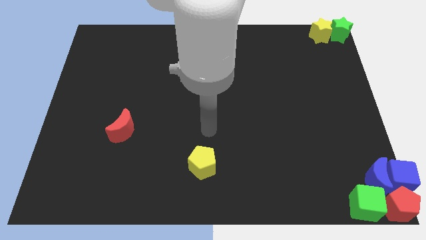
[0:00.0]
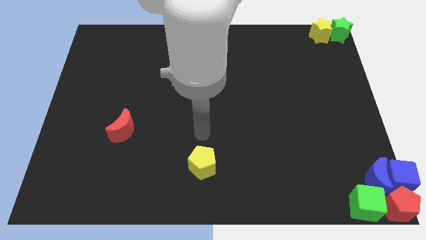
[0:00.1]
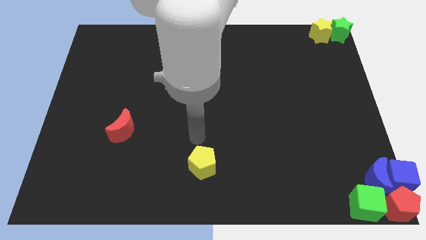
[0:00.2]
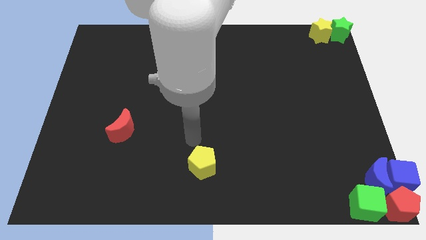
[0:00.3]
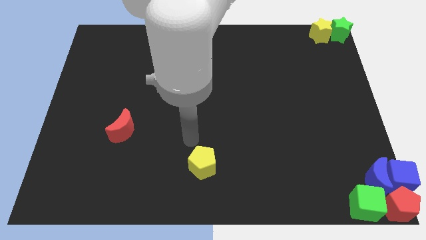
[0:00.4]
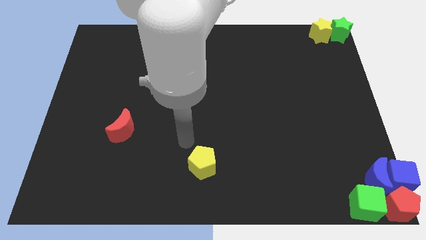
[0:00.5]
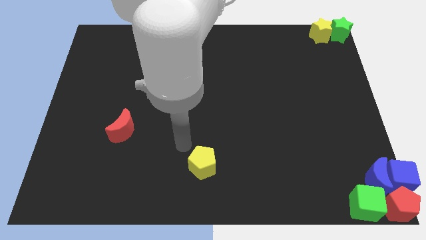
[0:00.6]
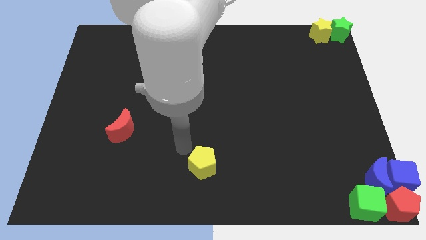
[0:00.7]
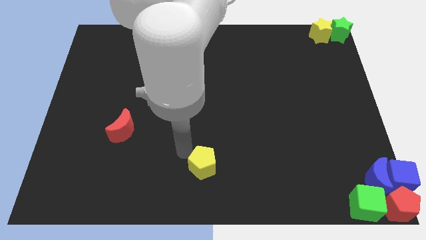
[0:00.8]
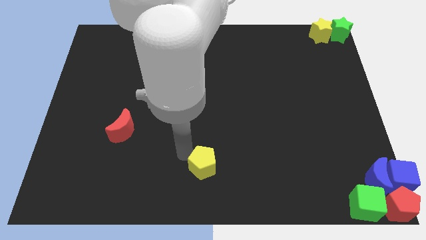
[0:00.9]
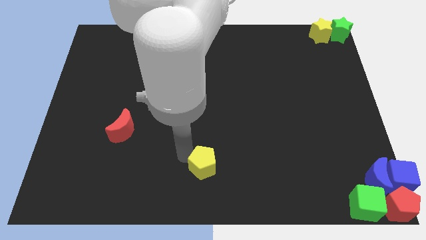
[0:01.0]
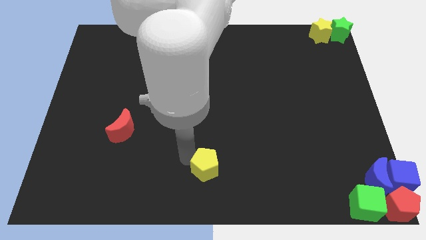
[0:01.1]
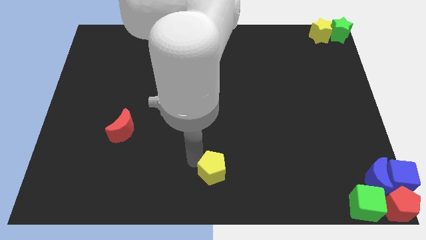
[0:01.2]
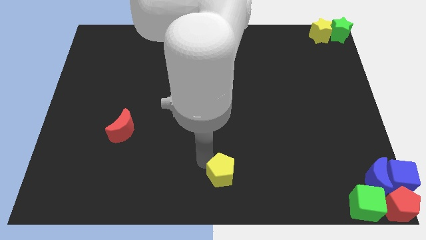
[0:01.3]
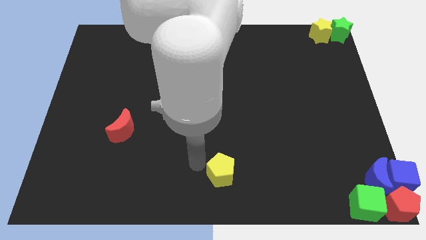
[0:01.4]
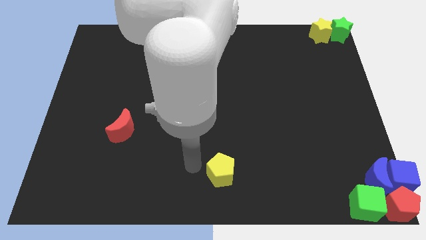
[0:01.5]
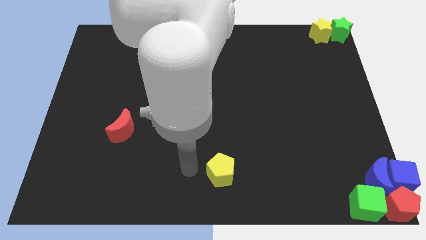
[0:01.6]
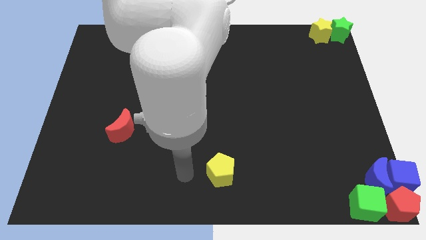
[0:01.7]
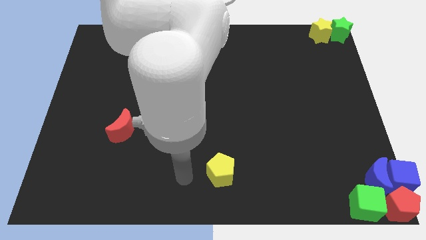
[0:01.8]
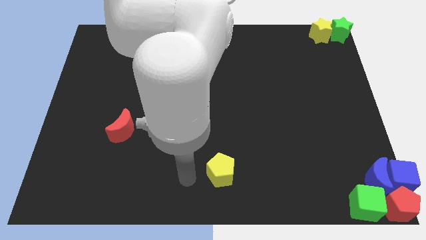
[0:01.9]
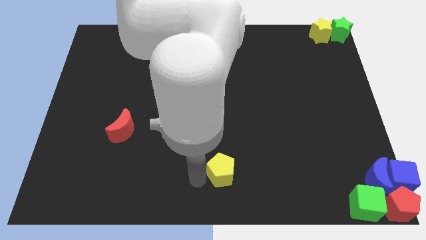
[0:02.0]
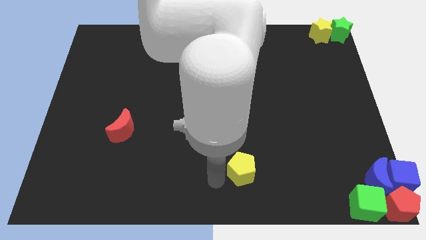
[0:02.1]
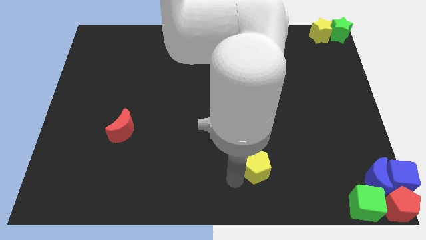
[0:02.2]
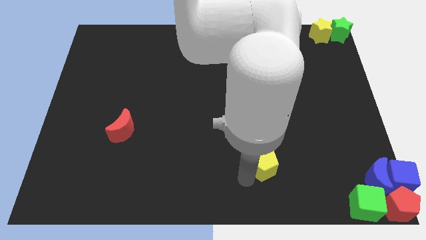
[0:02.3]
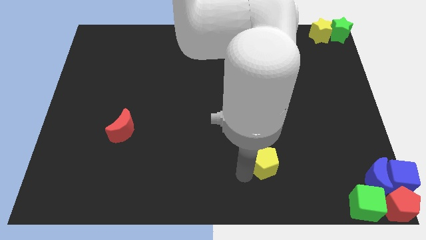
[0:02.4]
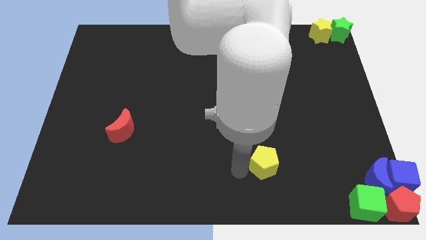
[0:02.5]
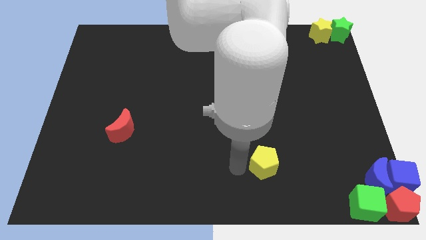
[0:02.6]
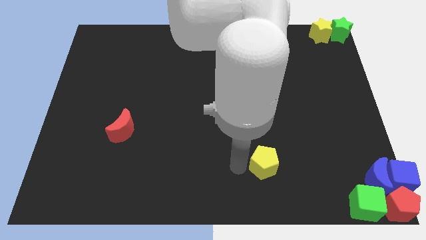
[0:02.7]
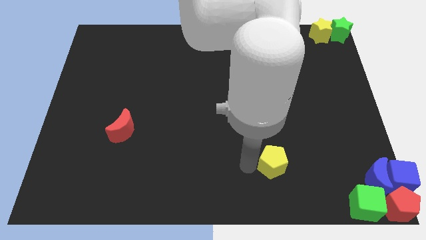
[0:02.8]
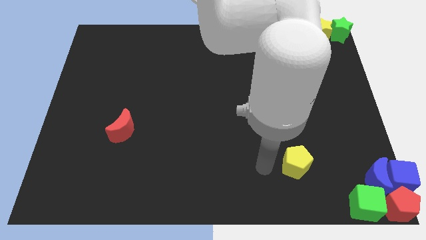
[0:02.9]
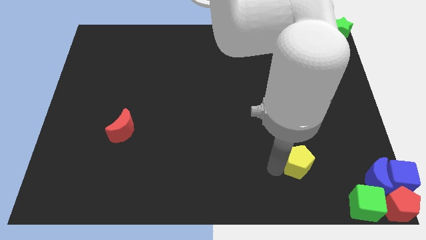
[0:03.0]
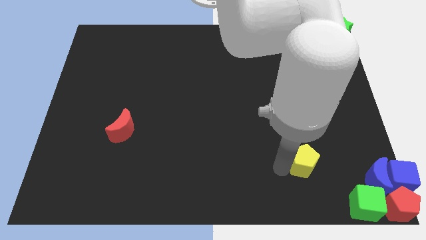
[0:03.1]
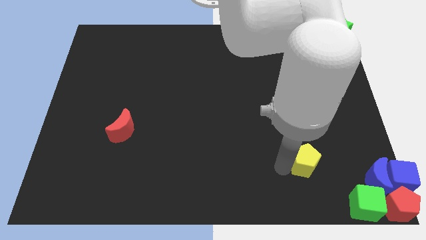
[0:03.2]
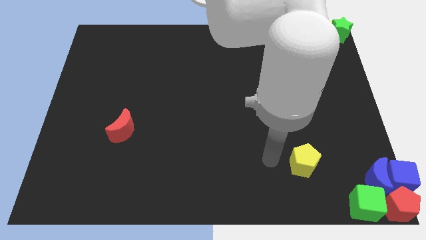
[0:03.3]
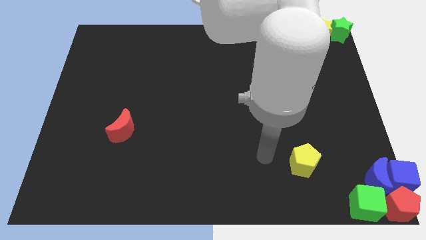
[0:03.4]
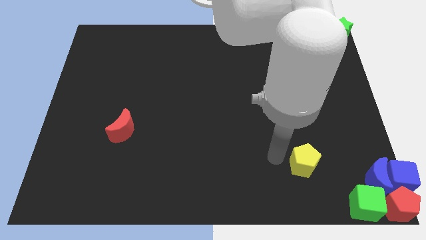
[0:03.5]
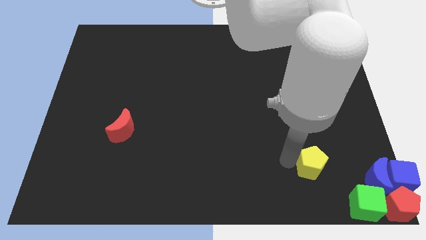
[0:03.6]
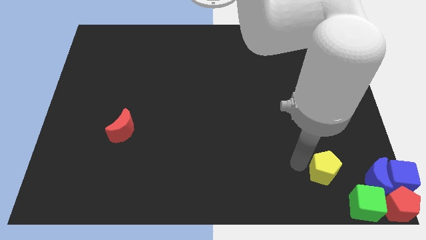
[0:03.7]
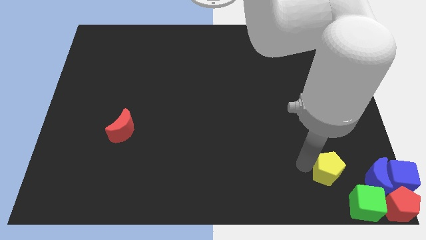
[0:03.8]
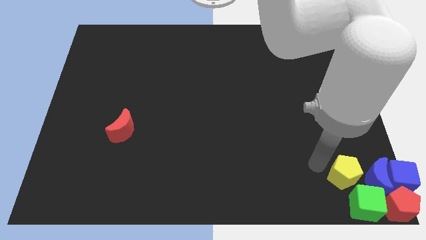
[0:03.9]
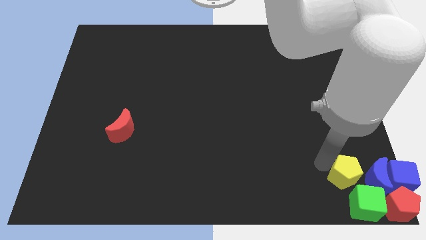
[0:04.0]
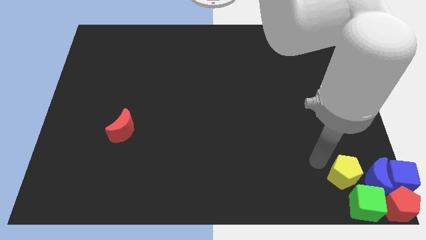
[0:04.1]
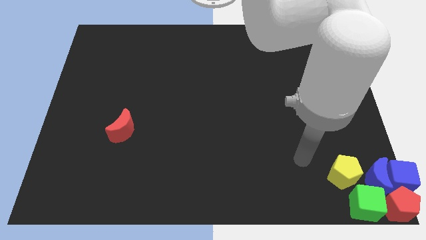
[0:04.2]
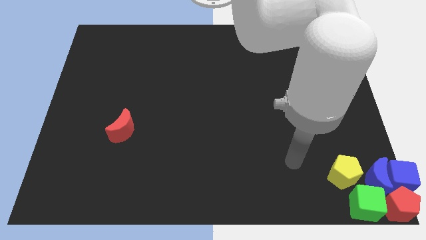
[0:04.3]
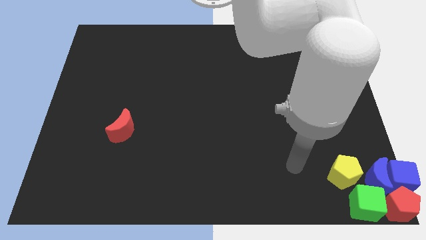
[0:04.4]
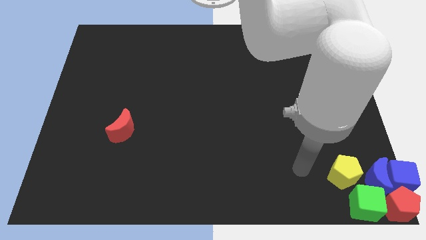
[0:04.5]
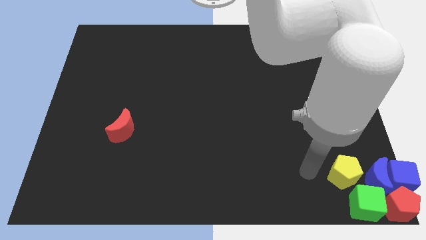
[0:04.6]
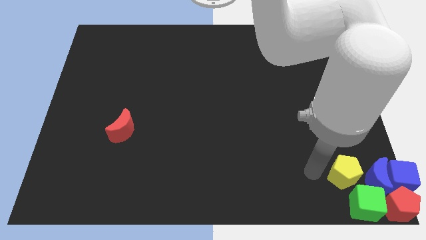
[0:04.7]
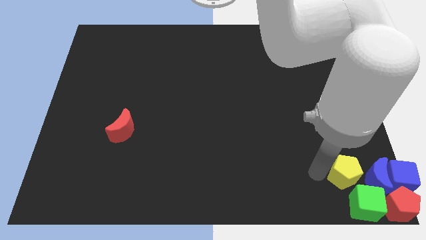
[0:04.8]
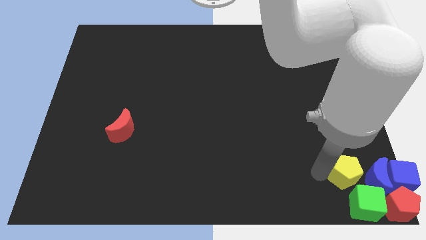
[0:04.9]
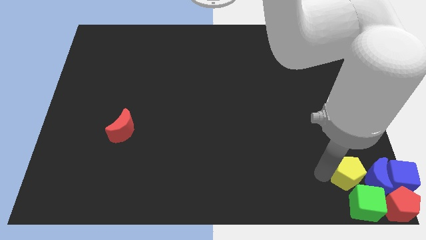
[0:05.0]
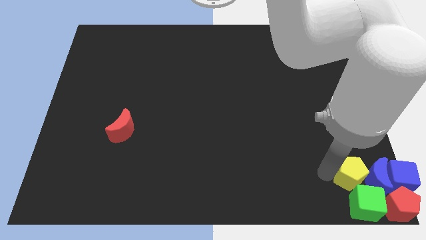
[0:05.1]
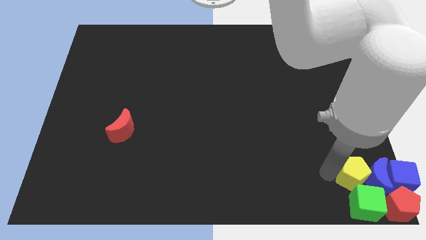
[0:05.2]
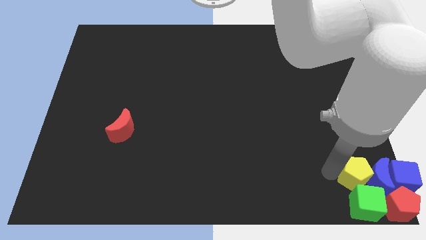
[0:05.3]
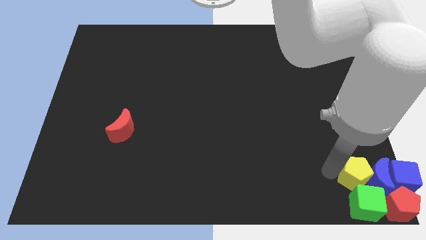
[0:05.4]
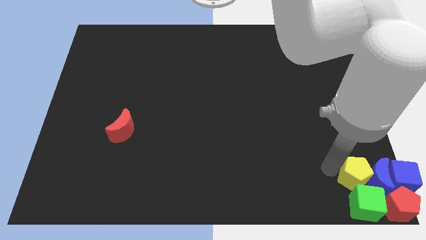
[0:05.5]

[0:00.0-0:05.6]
push the yellow pentagon into the group of blocks

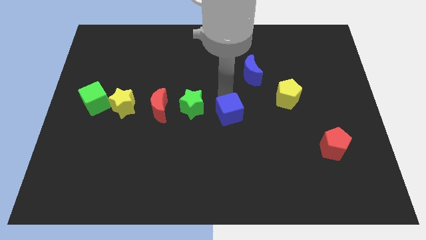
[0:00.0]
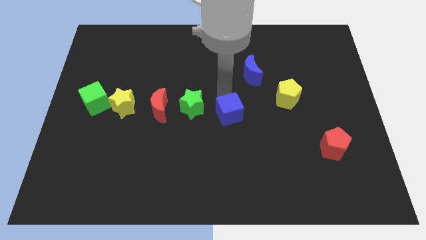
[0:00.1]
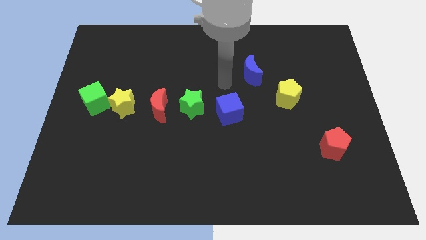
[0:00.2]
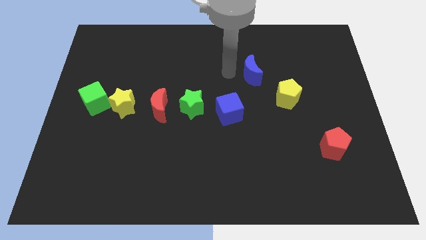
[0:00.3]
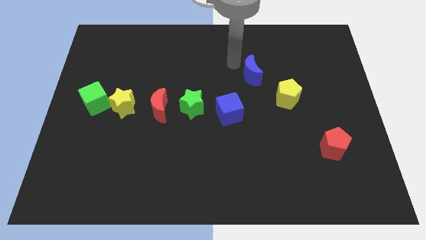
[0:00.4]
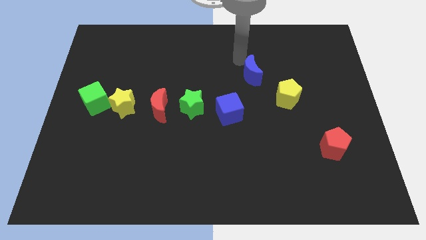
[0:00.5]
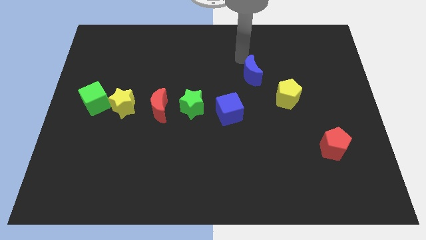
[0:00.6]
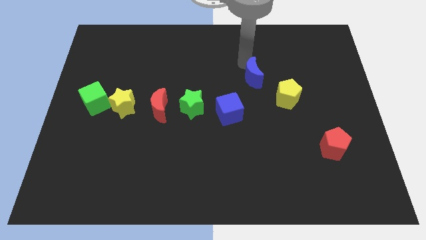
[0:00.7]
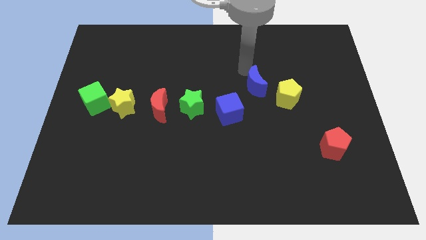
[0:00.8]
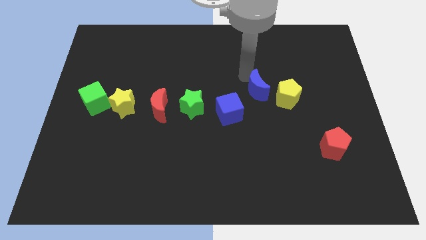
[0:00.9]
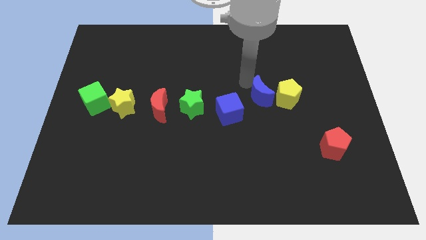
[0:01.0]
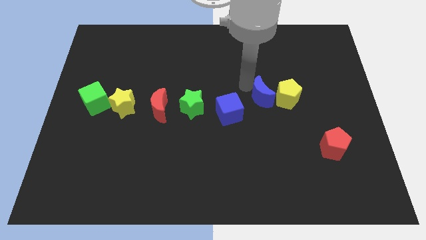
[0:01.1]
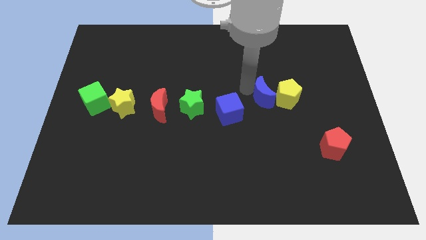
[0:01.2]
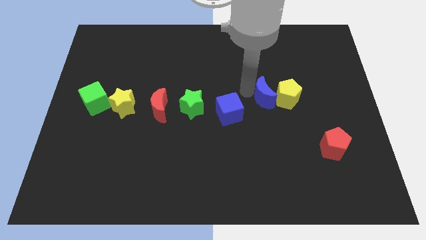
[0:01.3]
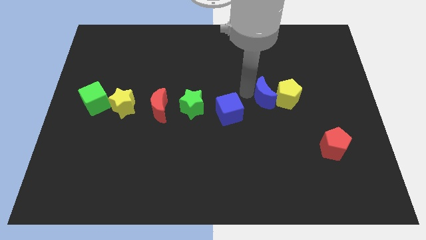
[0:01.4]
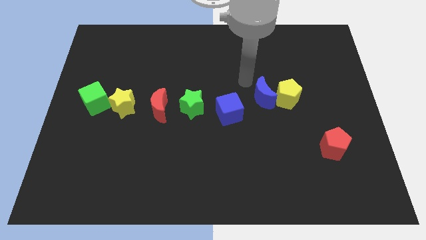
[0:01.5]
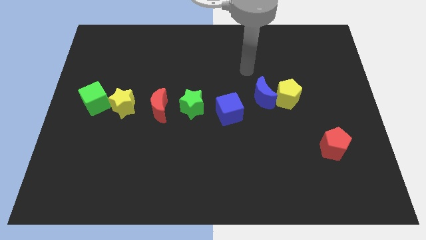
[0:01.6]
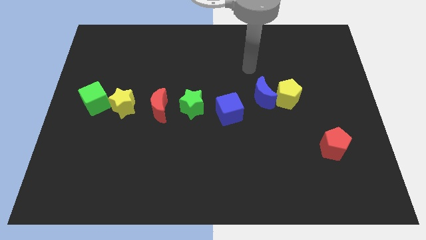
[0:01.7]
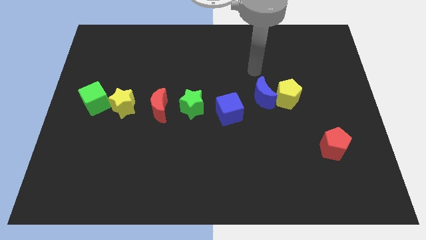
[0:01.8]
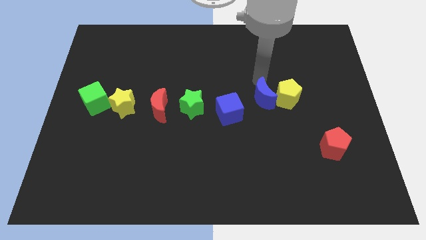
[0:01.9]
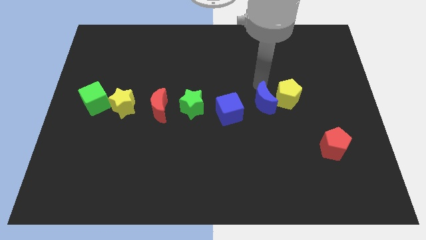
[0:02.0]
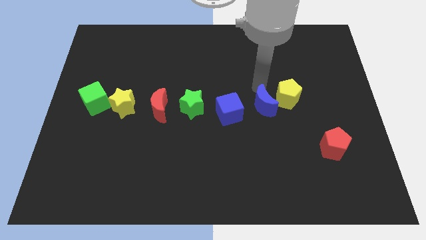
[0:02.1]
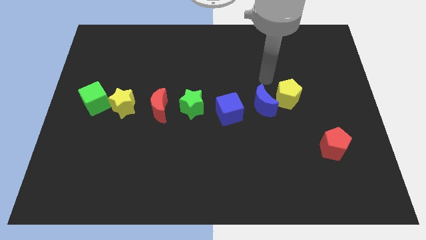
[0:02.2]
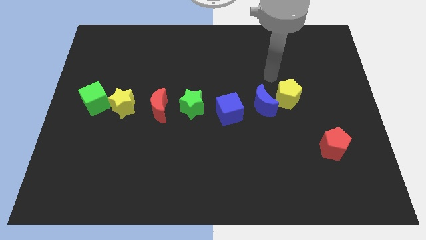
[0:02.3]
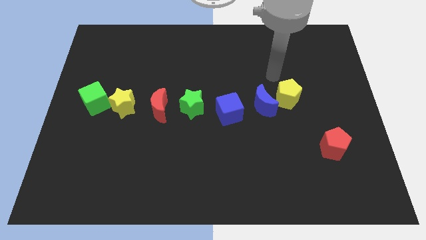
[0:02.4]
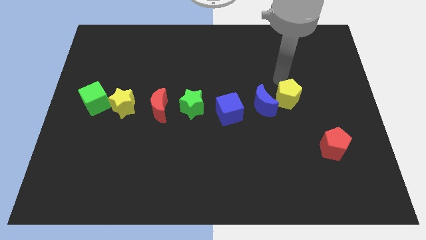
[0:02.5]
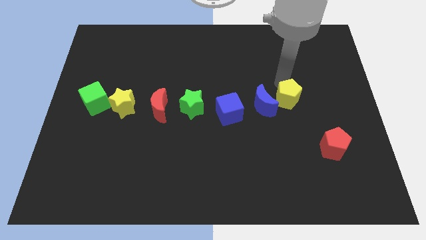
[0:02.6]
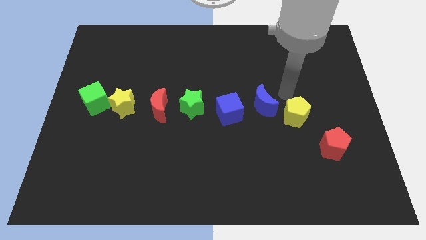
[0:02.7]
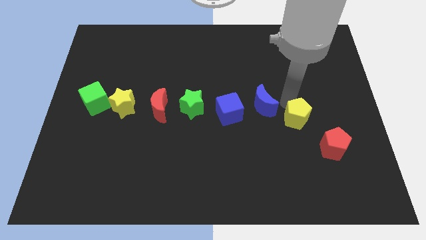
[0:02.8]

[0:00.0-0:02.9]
move the blue crescent right to the blue cube

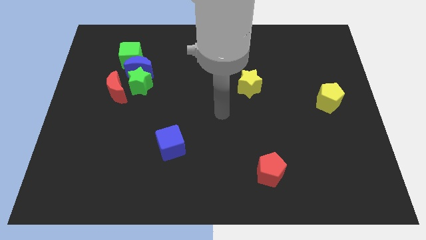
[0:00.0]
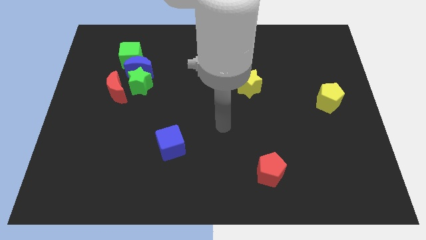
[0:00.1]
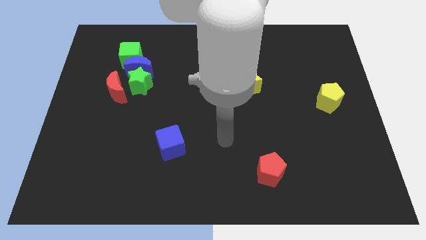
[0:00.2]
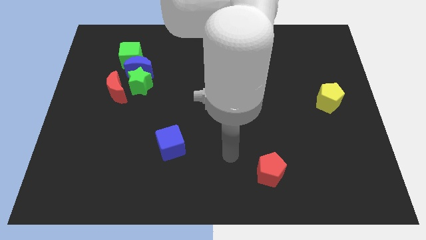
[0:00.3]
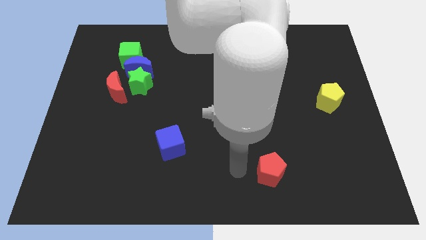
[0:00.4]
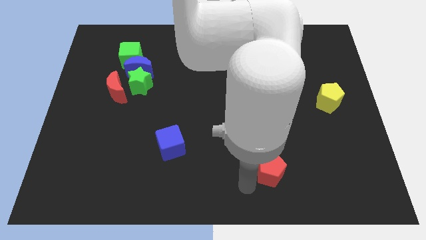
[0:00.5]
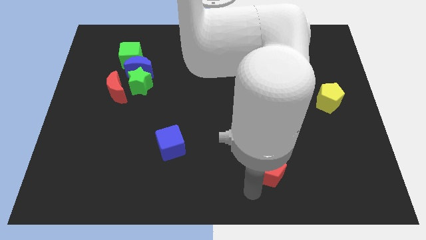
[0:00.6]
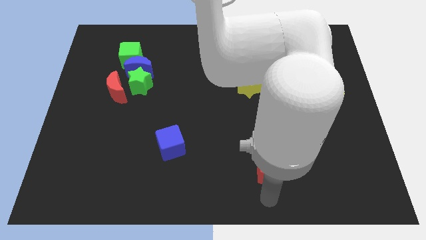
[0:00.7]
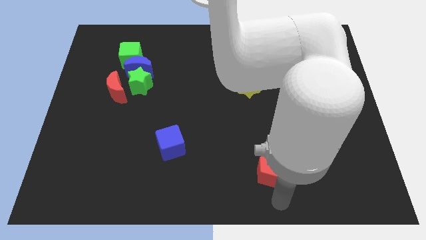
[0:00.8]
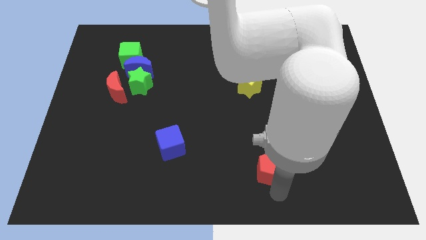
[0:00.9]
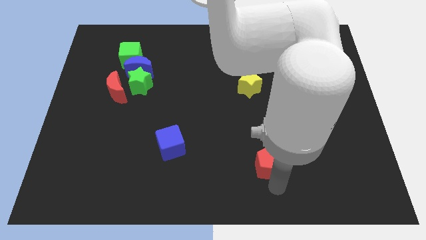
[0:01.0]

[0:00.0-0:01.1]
touch the red pentagon
